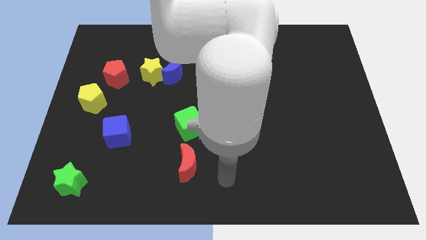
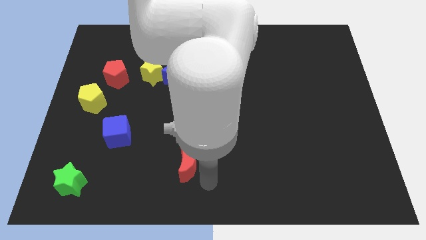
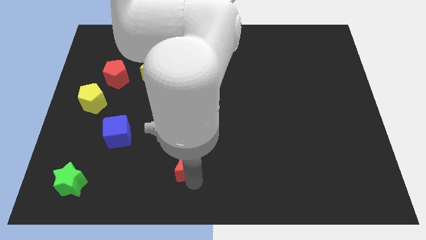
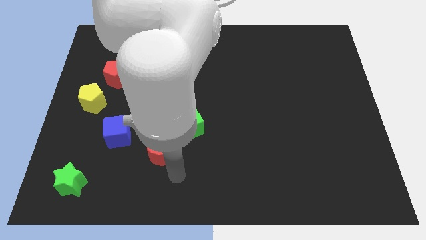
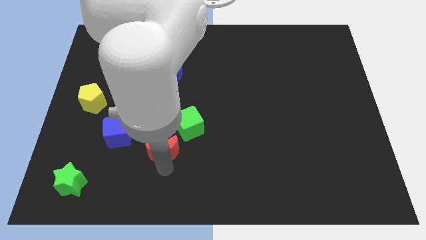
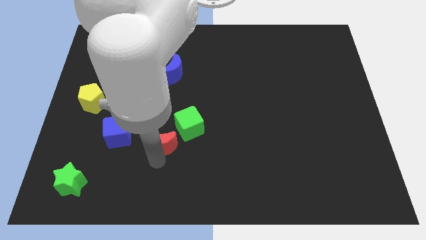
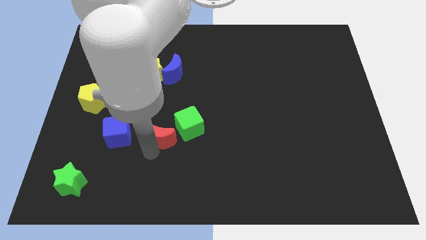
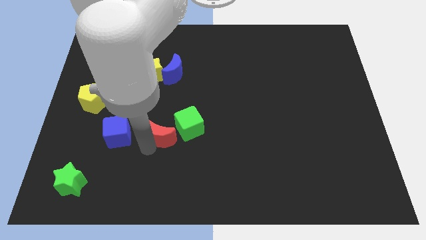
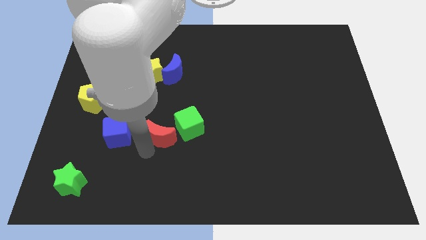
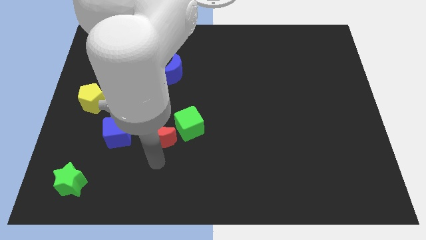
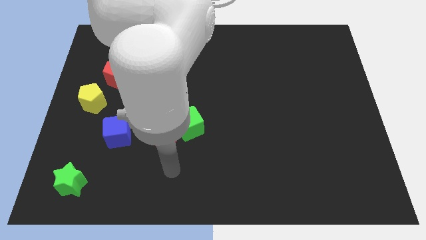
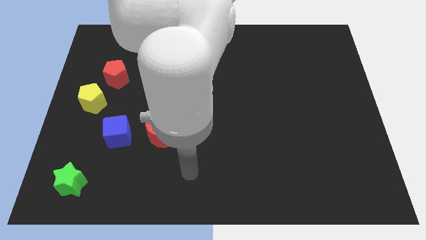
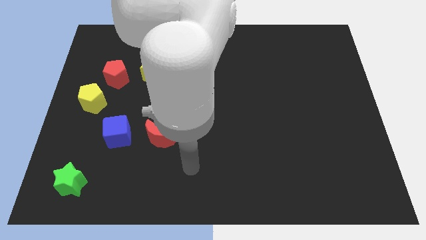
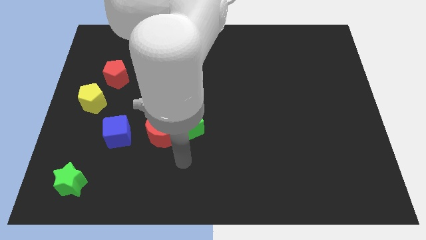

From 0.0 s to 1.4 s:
put the red crescent on the left side of the green cube

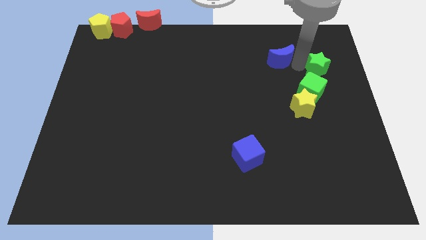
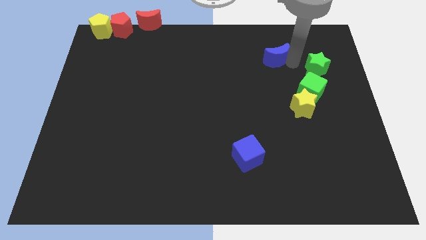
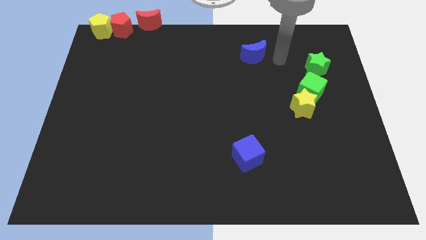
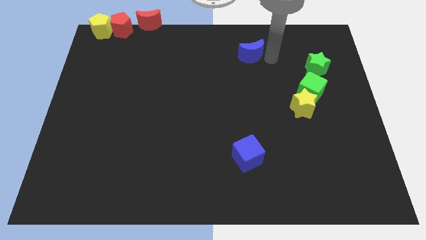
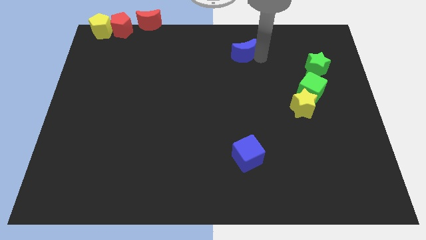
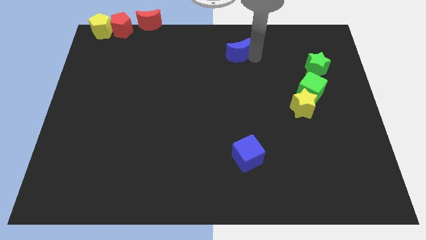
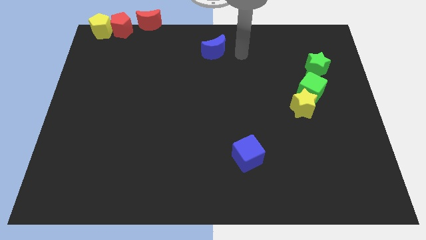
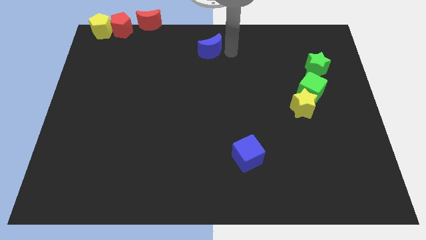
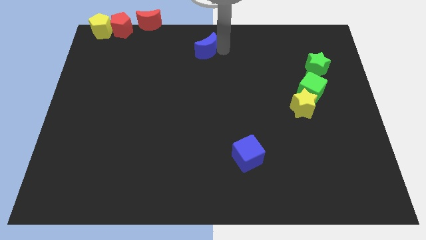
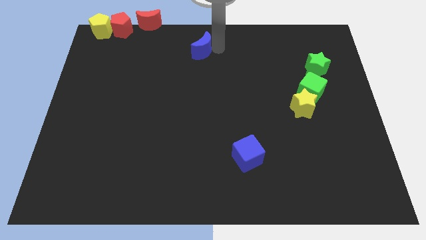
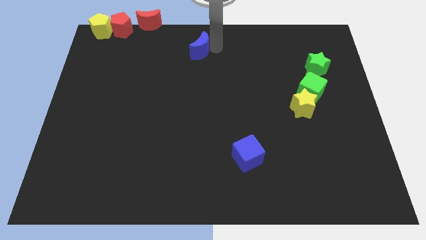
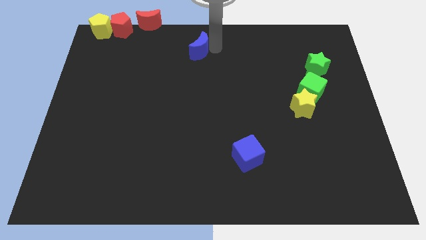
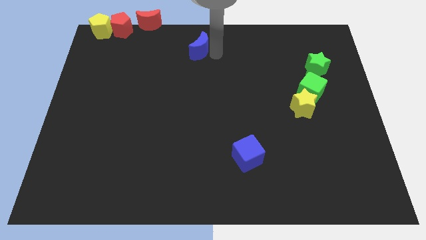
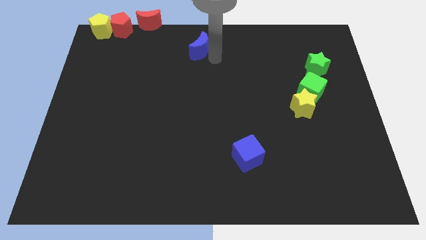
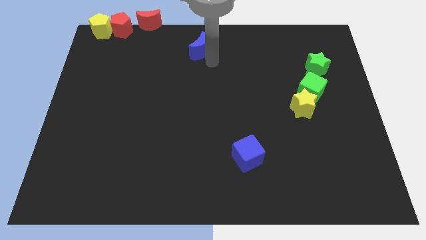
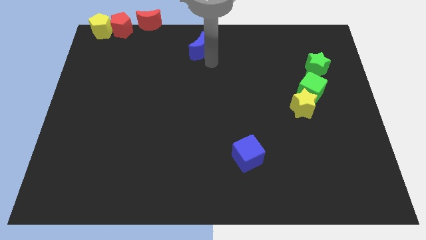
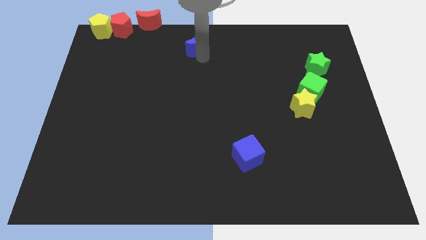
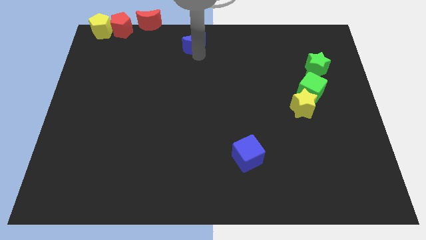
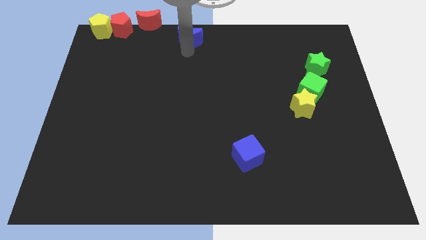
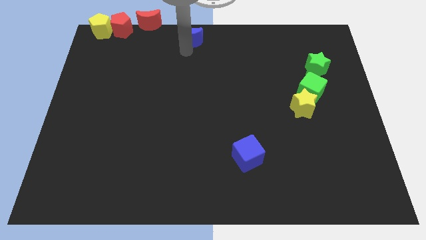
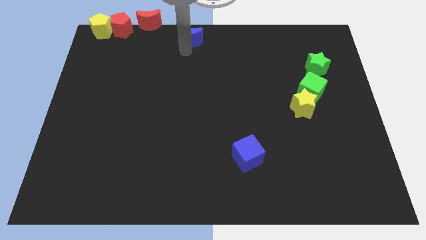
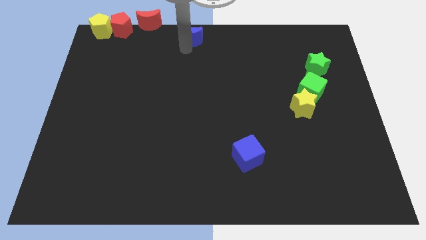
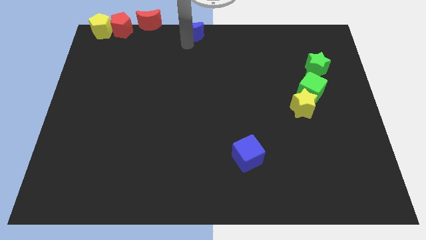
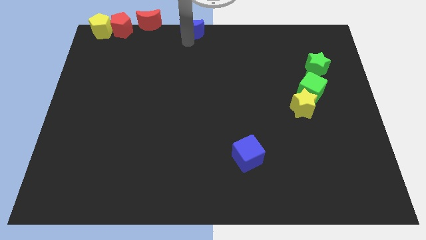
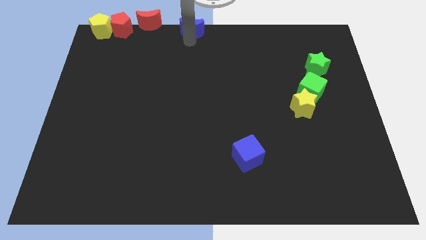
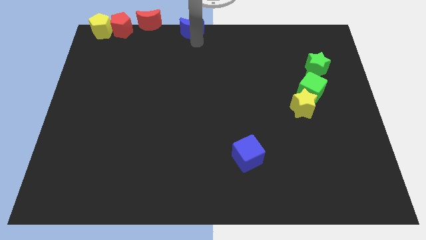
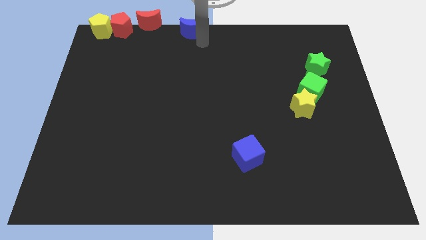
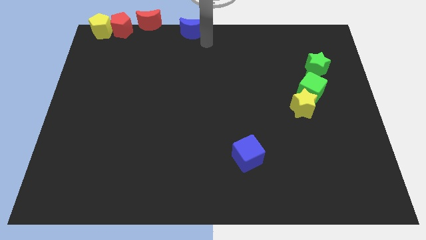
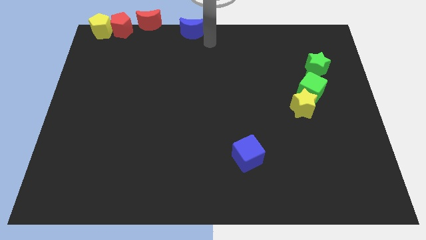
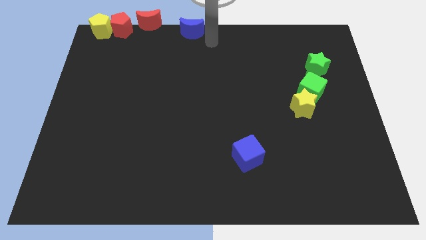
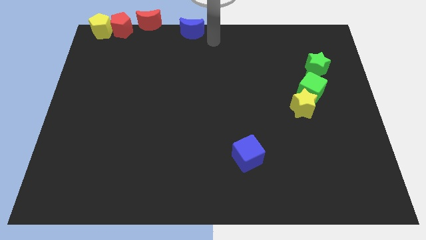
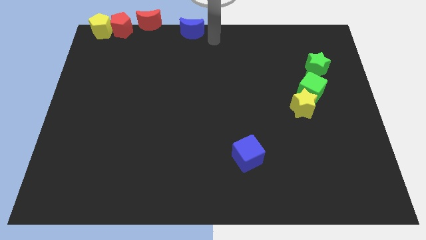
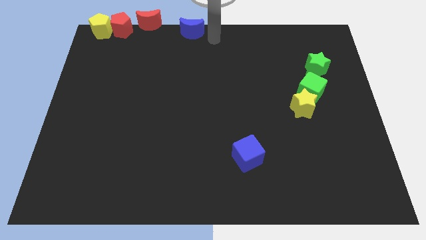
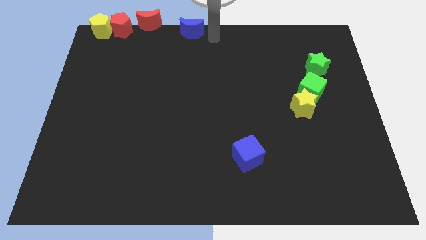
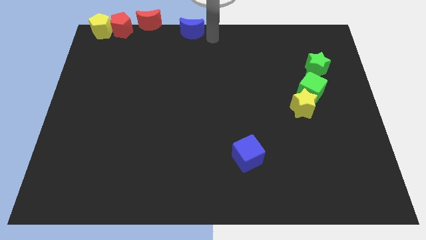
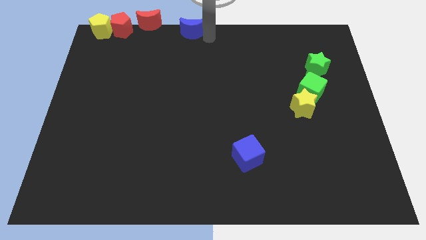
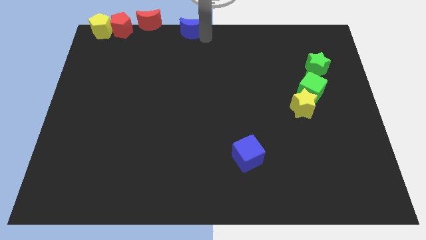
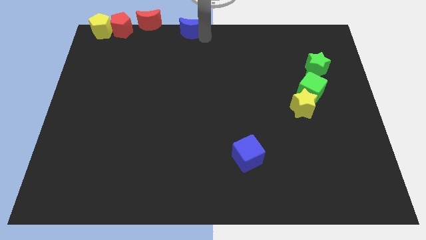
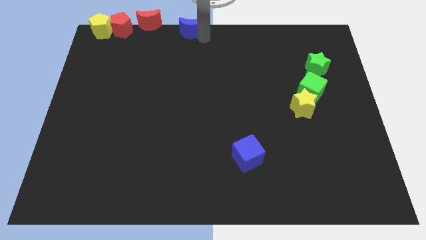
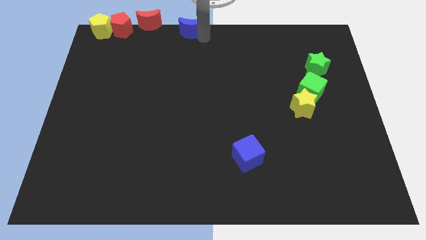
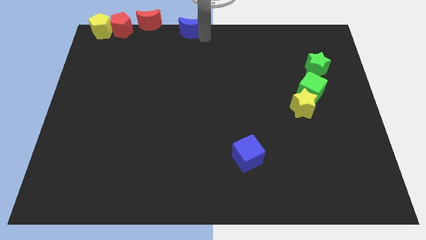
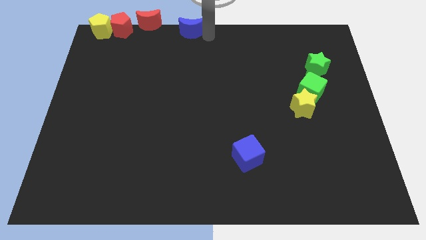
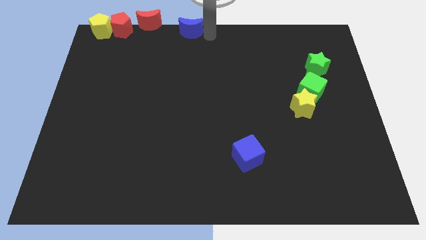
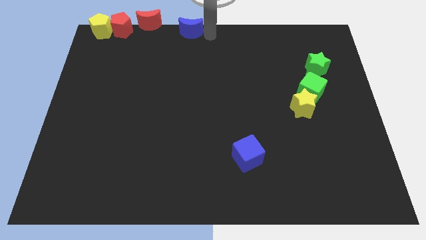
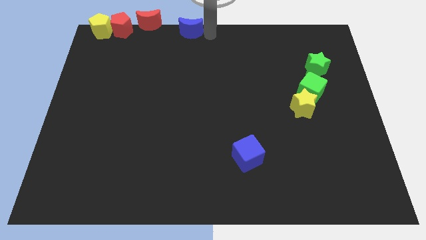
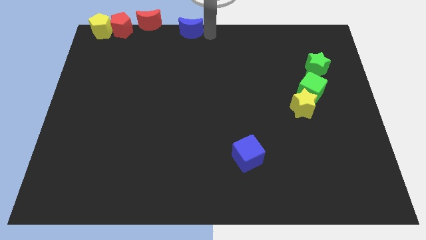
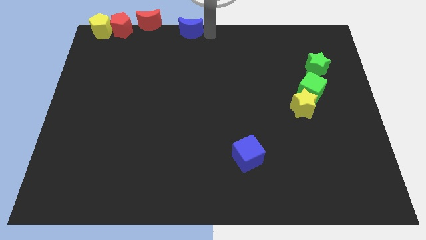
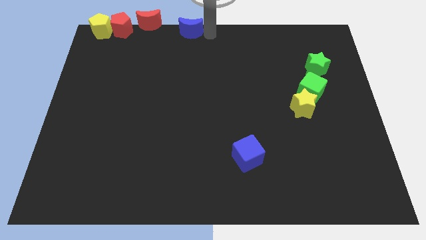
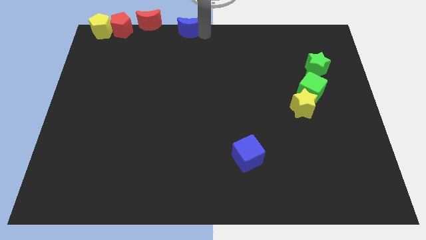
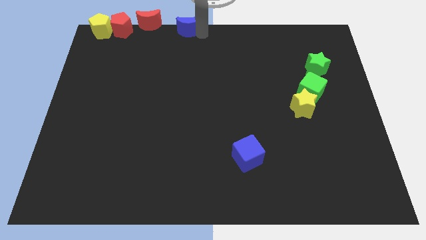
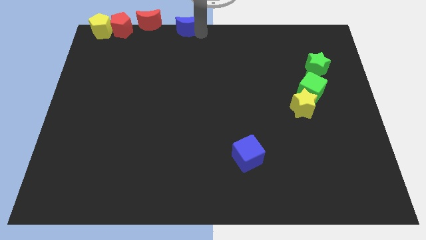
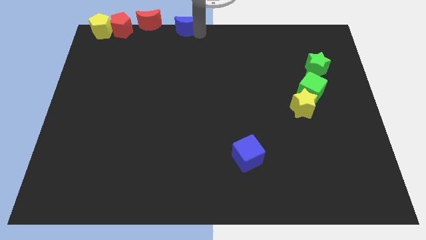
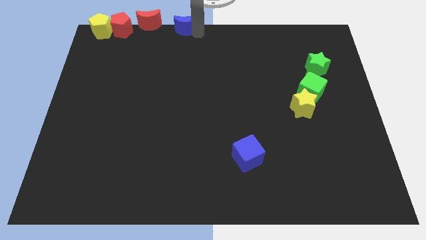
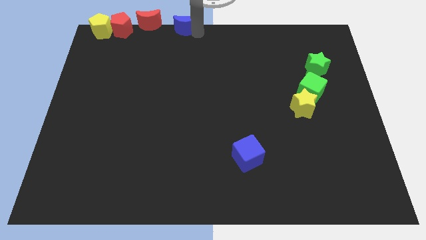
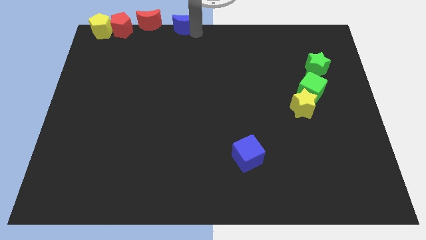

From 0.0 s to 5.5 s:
push the blue crescent to the right of the red crescent

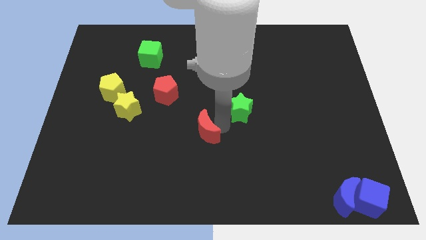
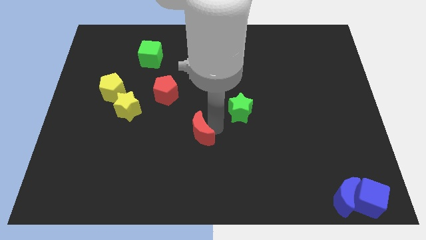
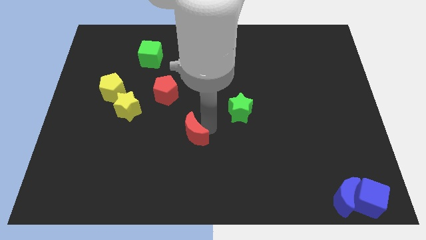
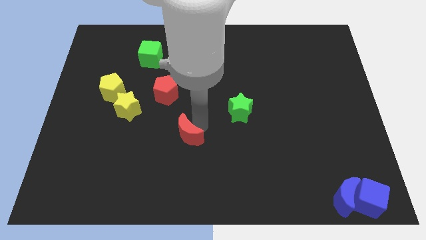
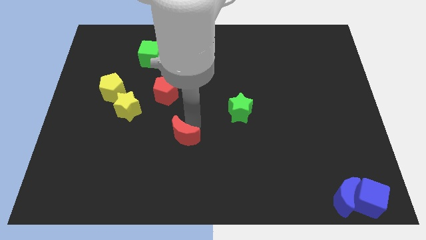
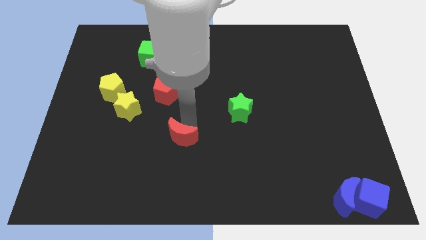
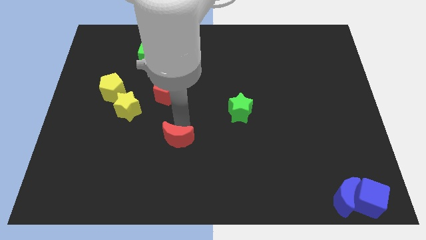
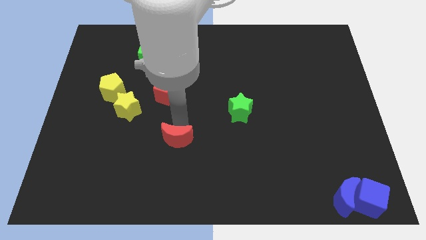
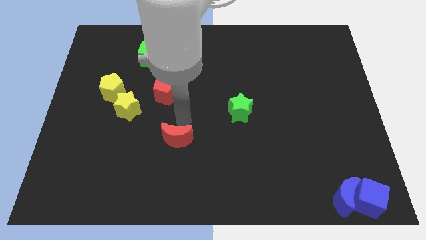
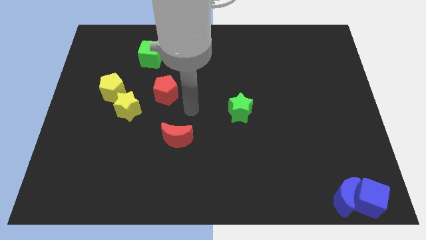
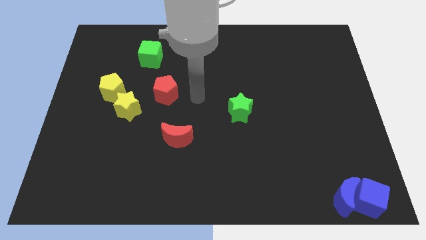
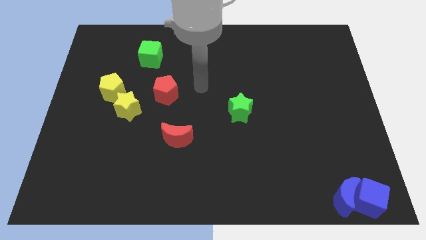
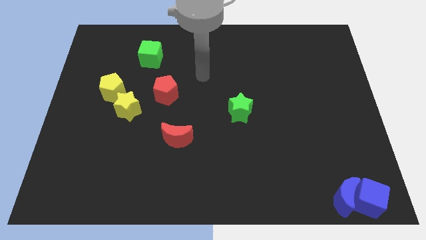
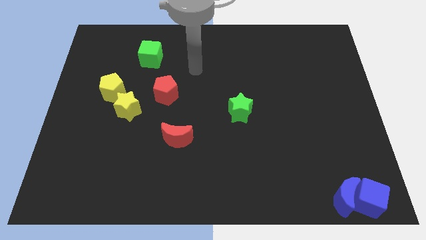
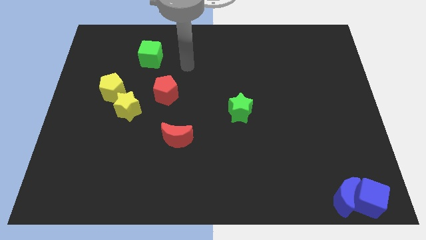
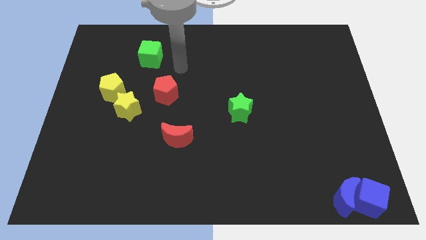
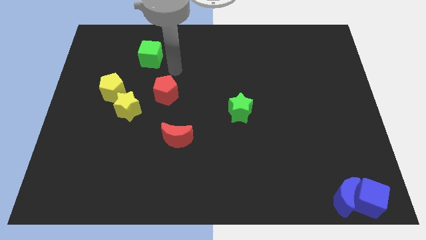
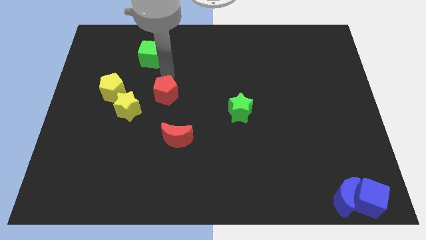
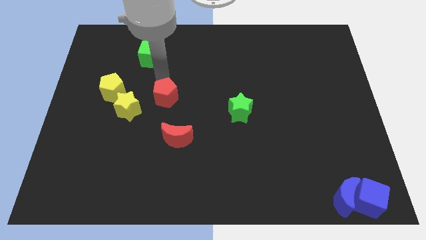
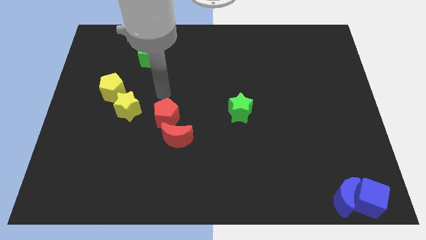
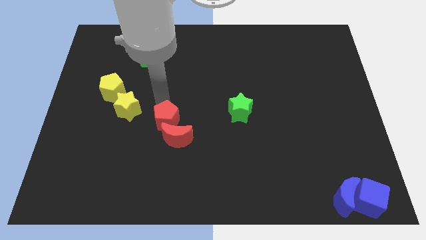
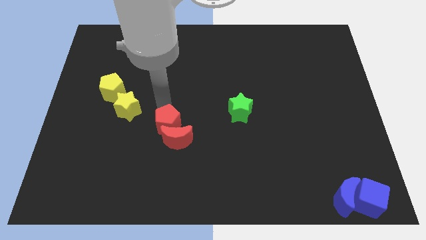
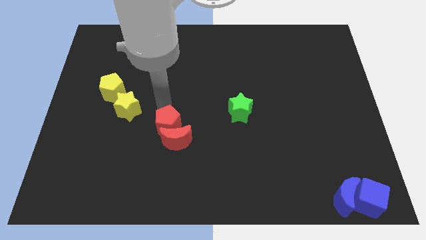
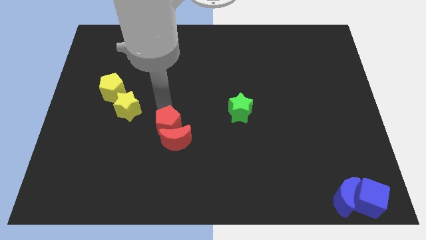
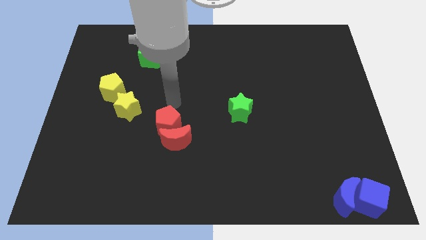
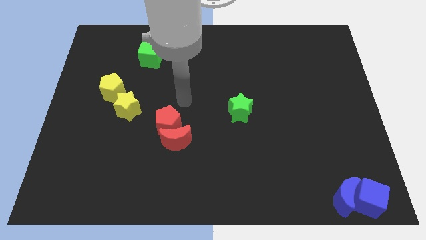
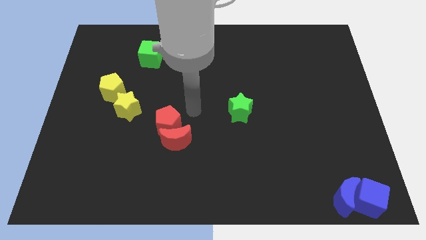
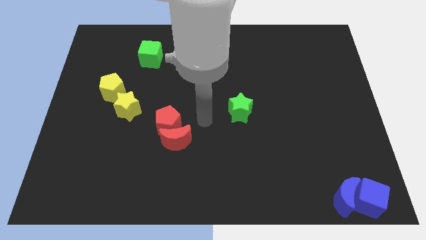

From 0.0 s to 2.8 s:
separate the red moon from the green star
